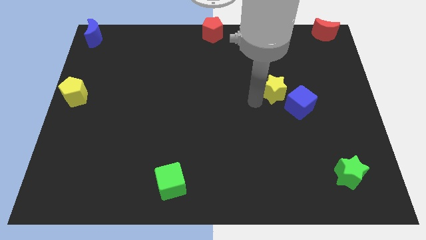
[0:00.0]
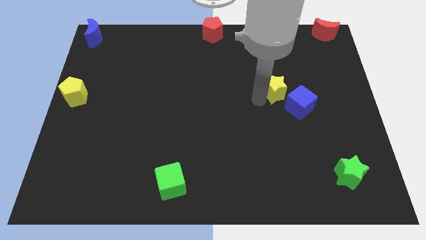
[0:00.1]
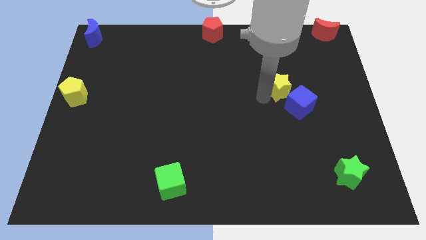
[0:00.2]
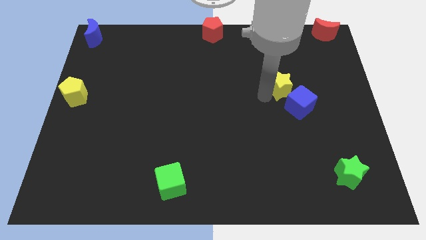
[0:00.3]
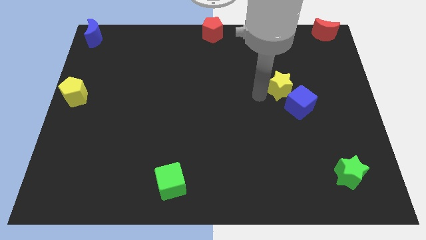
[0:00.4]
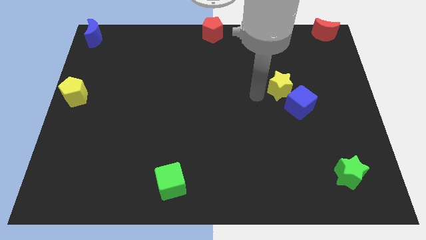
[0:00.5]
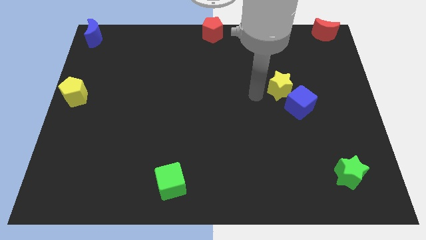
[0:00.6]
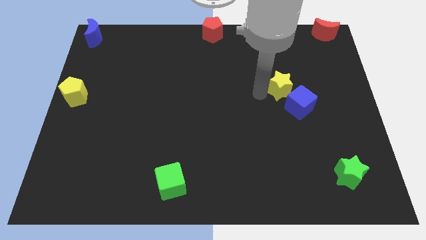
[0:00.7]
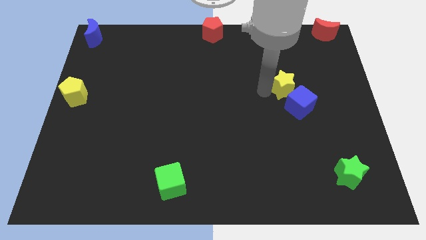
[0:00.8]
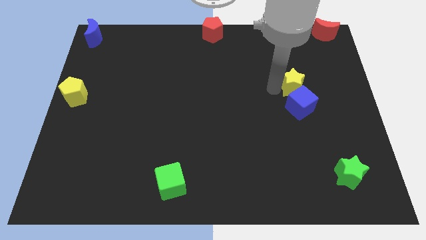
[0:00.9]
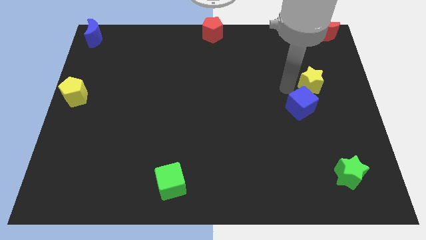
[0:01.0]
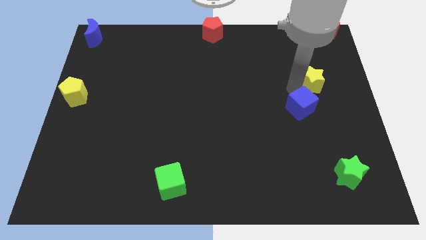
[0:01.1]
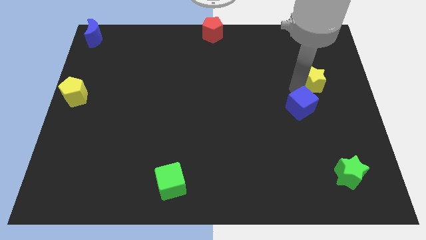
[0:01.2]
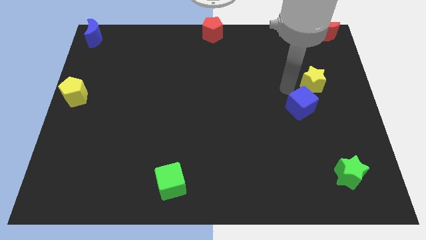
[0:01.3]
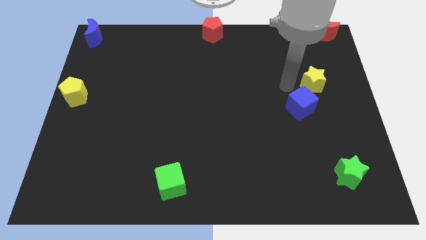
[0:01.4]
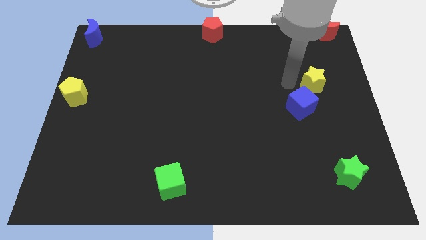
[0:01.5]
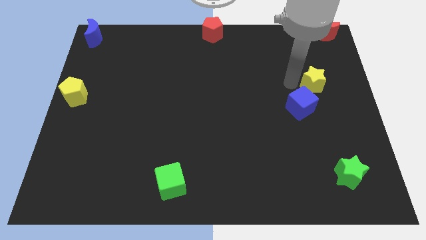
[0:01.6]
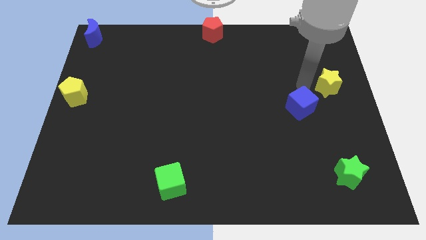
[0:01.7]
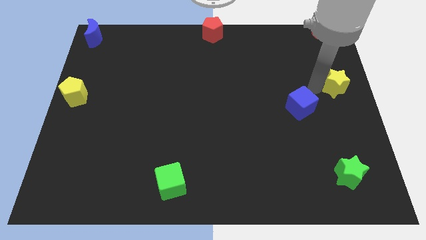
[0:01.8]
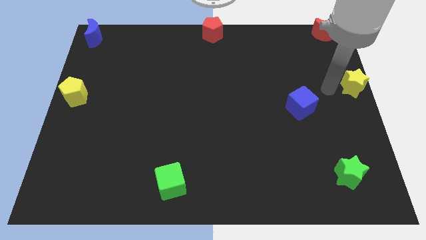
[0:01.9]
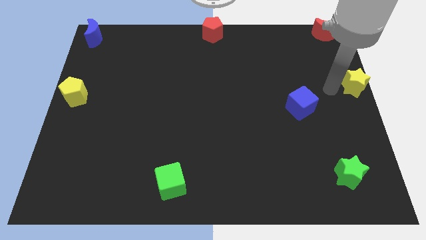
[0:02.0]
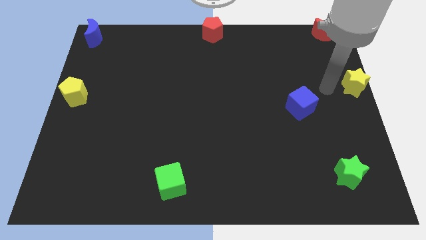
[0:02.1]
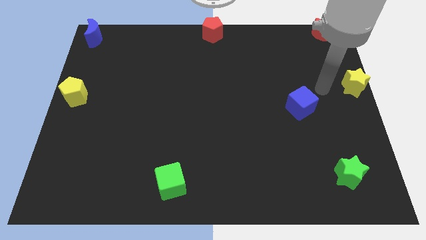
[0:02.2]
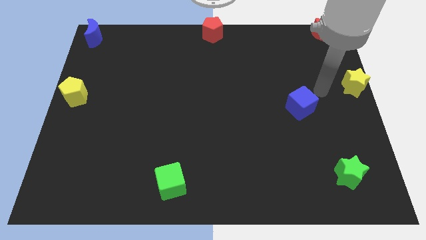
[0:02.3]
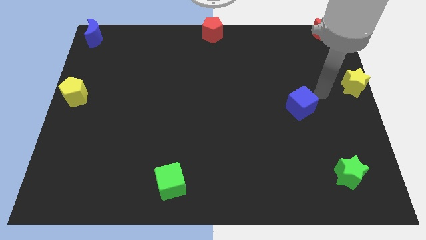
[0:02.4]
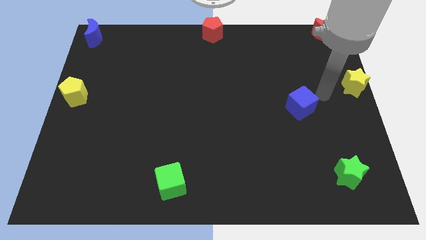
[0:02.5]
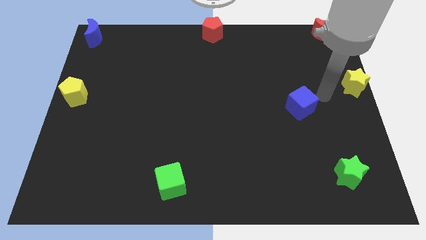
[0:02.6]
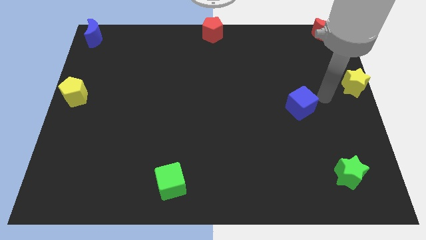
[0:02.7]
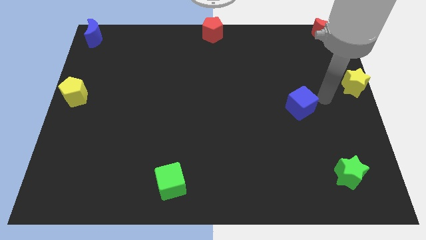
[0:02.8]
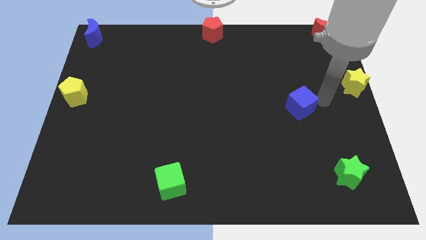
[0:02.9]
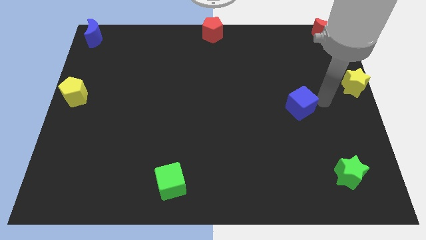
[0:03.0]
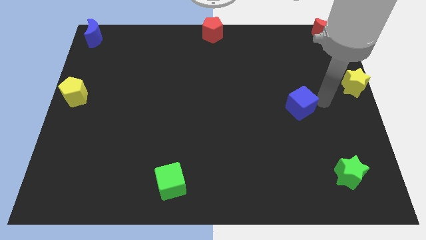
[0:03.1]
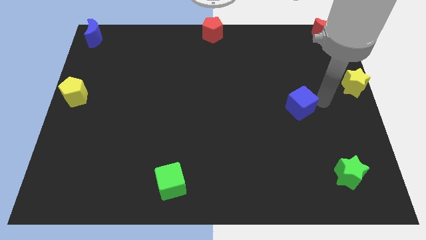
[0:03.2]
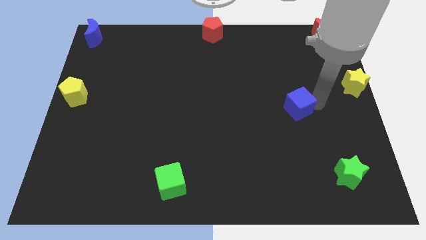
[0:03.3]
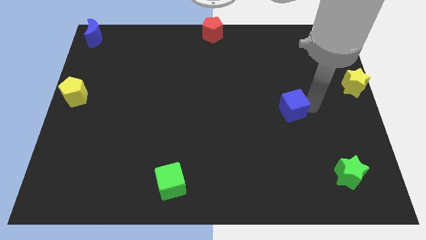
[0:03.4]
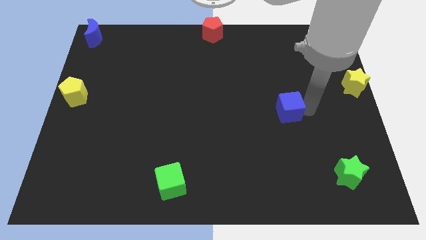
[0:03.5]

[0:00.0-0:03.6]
move yellow star to the right of the board

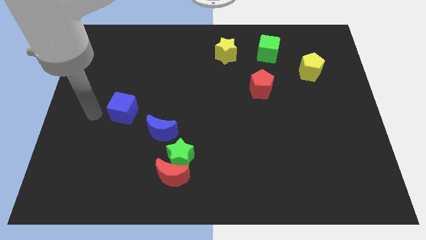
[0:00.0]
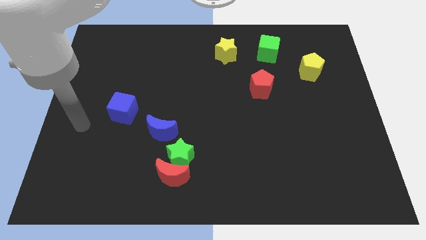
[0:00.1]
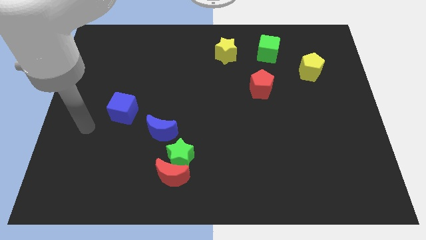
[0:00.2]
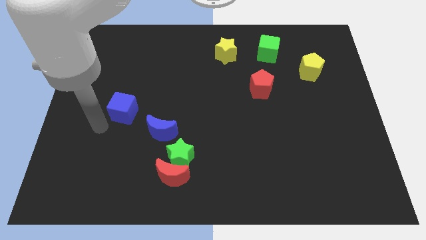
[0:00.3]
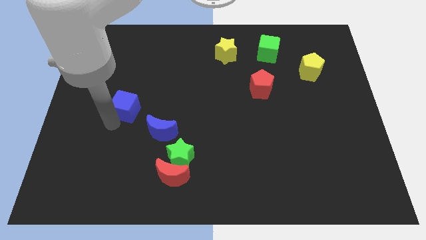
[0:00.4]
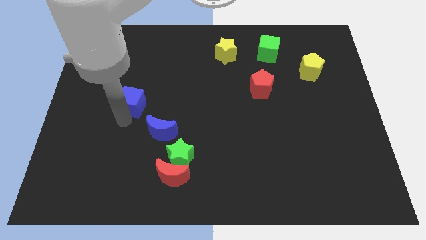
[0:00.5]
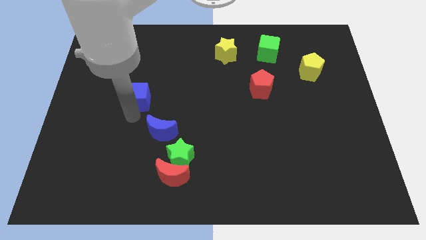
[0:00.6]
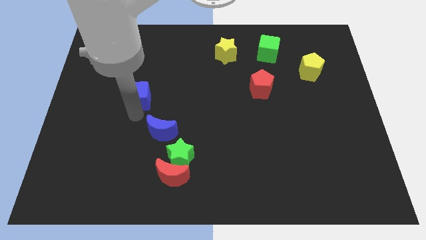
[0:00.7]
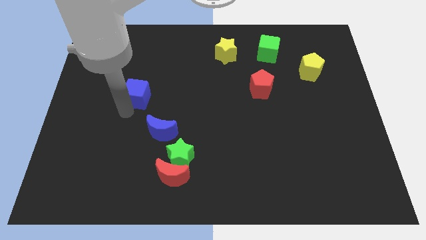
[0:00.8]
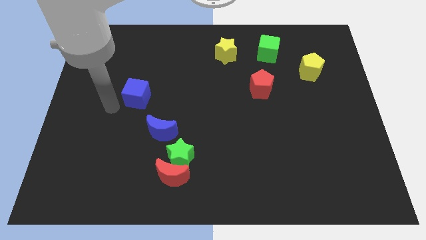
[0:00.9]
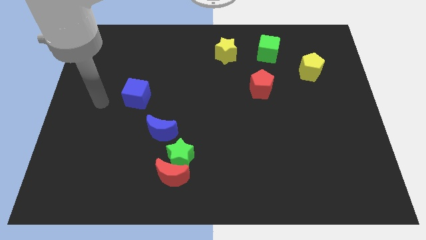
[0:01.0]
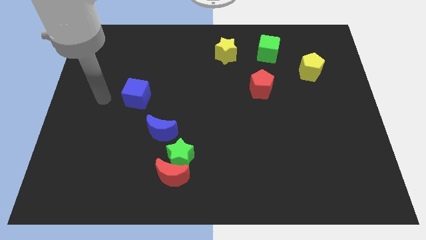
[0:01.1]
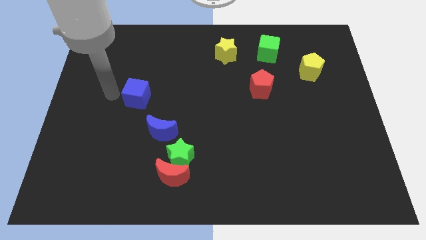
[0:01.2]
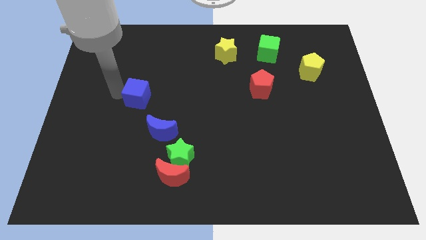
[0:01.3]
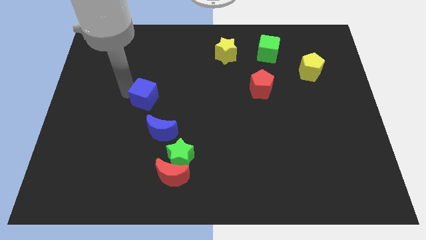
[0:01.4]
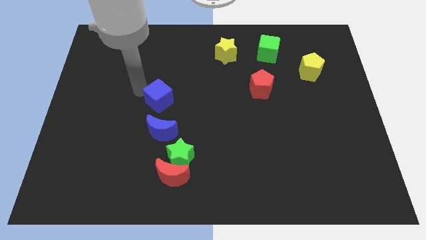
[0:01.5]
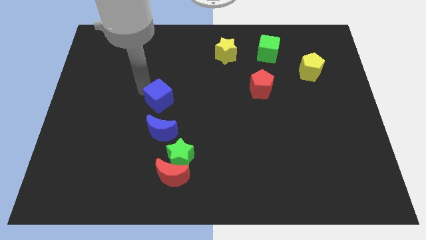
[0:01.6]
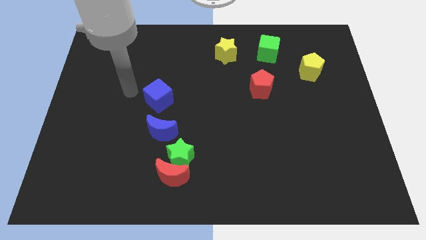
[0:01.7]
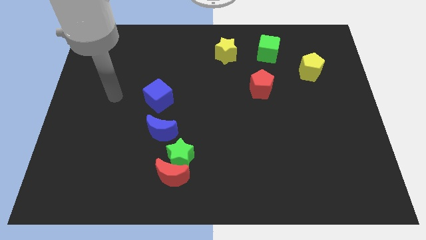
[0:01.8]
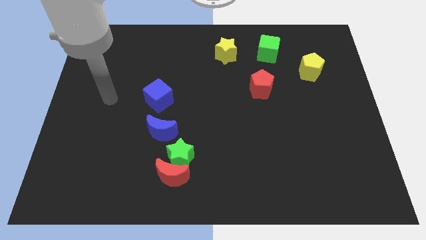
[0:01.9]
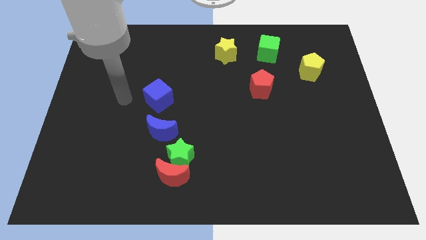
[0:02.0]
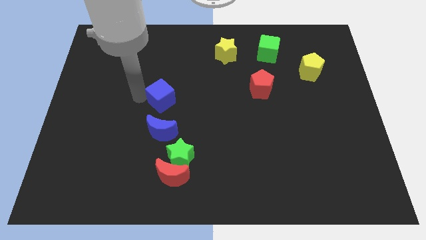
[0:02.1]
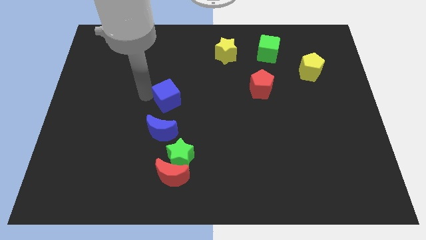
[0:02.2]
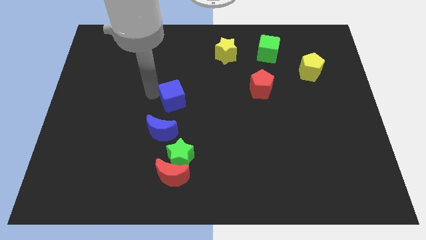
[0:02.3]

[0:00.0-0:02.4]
push the blue cube to the top side of blue moon

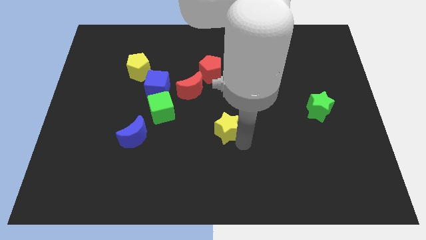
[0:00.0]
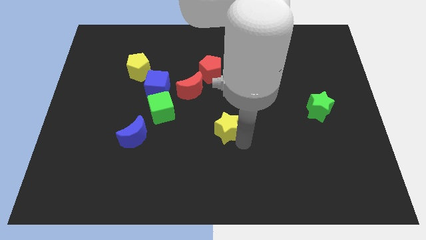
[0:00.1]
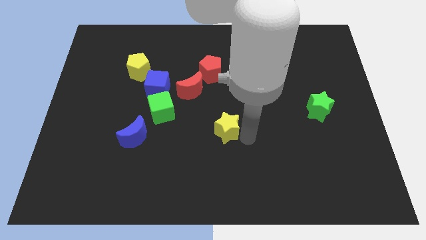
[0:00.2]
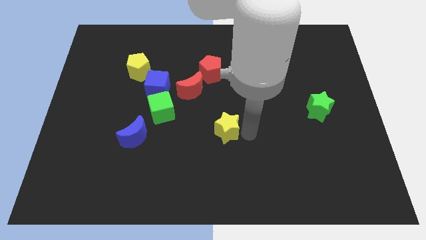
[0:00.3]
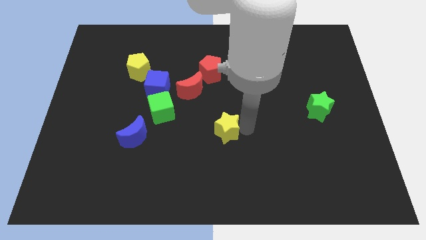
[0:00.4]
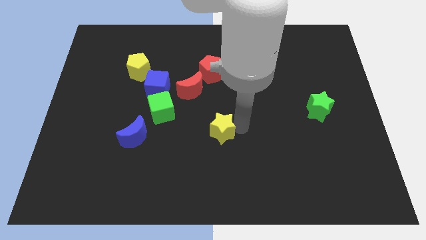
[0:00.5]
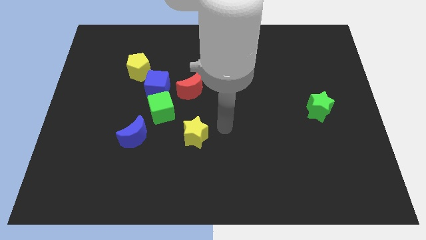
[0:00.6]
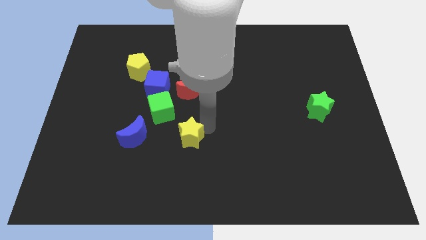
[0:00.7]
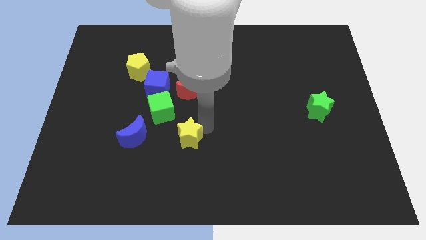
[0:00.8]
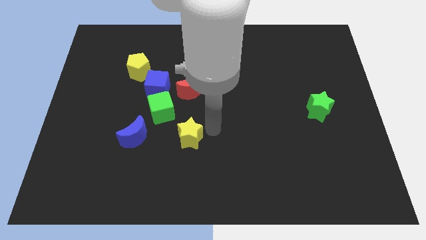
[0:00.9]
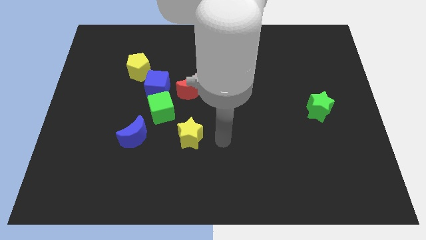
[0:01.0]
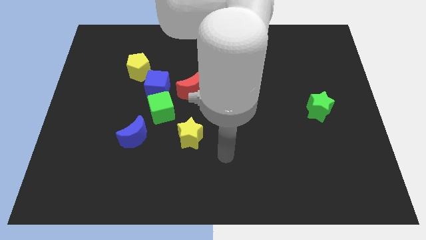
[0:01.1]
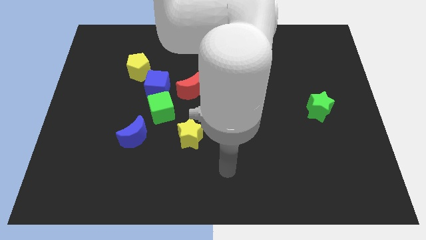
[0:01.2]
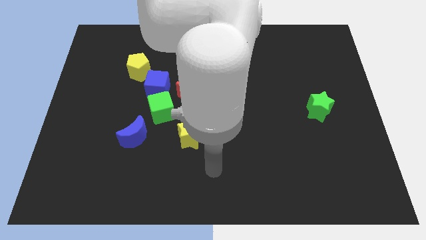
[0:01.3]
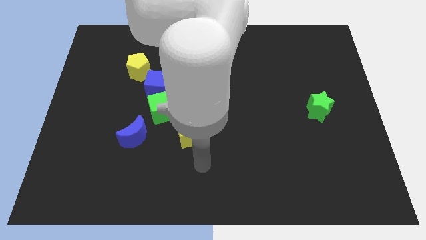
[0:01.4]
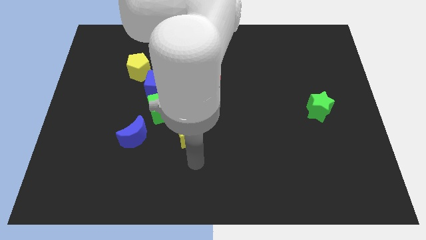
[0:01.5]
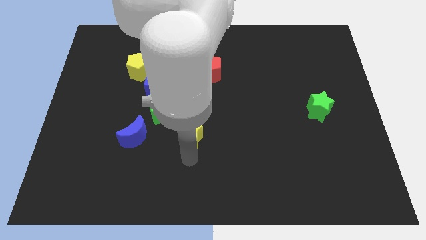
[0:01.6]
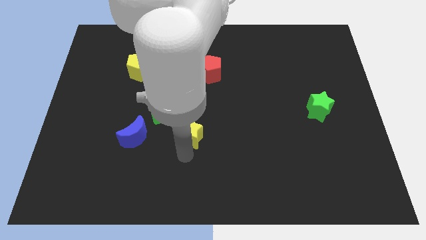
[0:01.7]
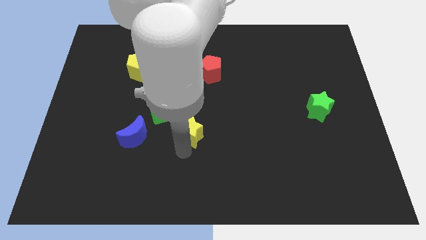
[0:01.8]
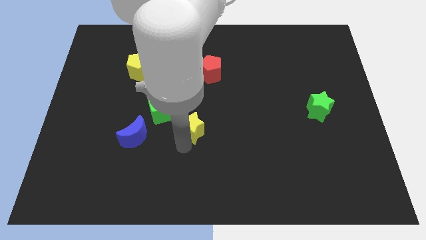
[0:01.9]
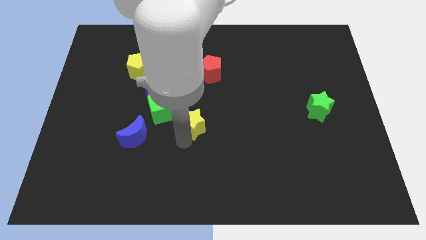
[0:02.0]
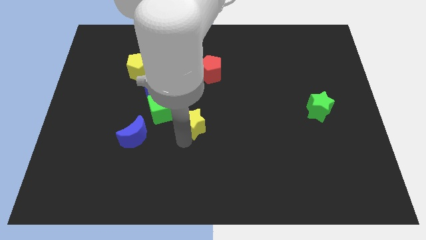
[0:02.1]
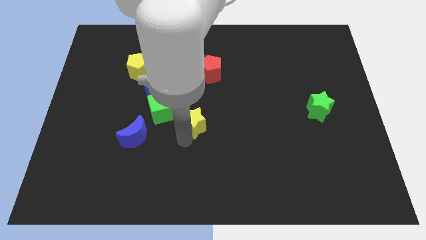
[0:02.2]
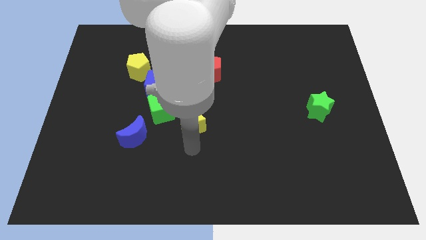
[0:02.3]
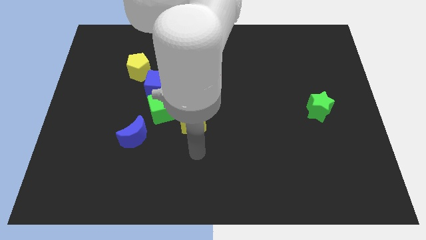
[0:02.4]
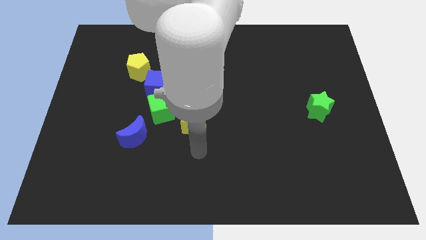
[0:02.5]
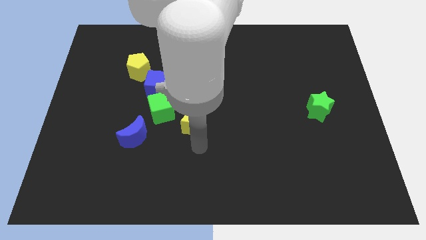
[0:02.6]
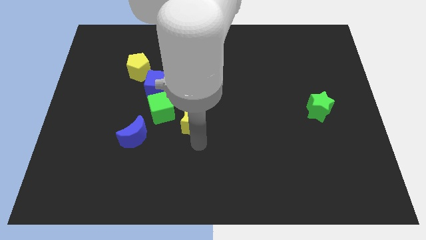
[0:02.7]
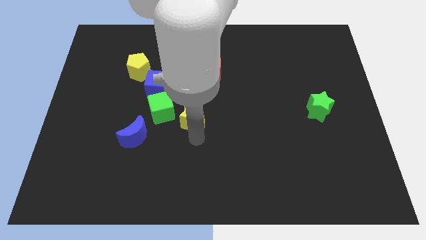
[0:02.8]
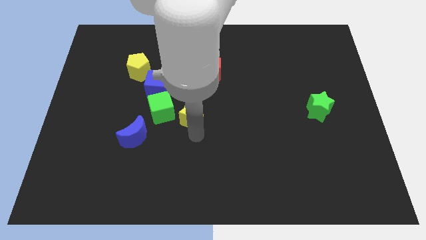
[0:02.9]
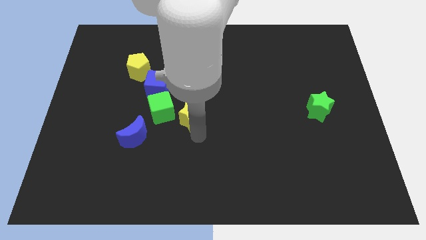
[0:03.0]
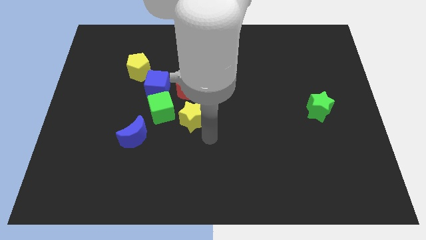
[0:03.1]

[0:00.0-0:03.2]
place the yellow star to the bottom of the red crescent
